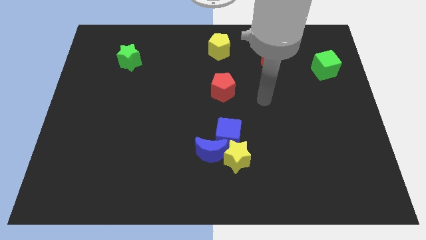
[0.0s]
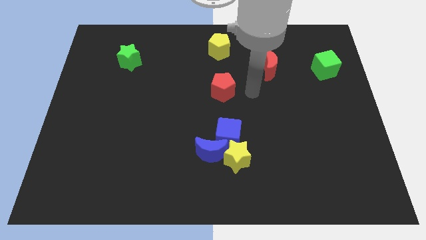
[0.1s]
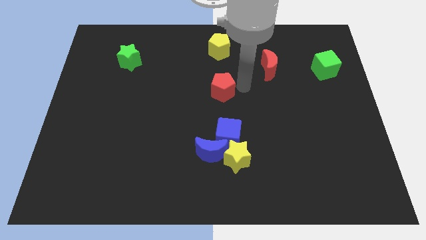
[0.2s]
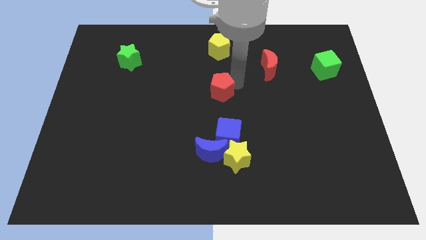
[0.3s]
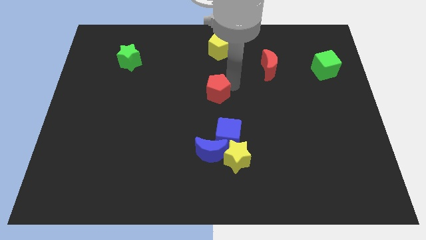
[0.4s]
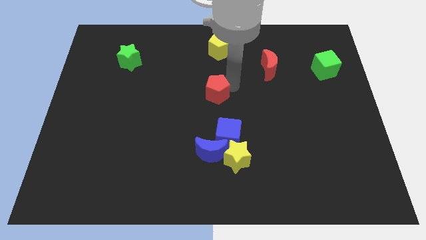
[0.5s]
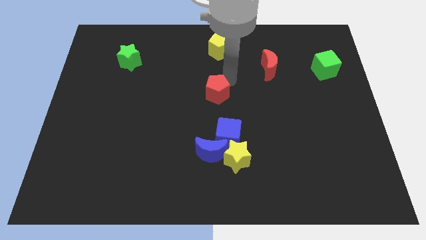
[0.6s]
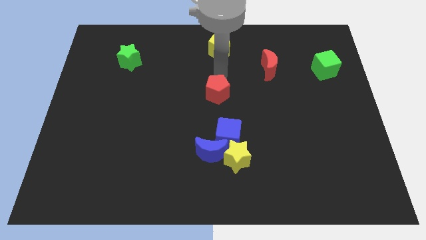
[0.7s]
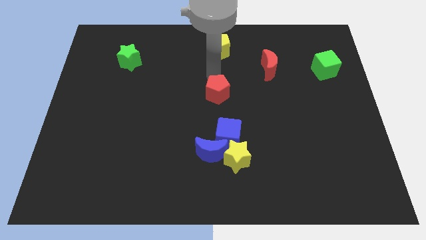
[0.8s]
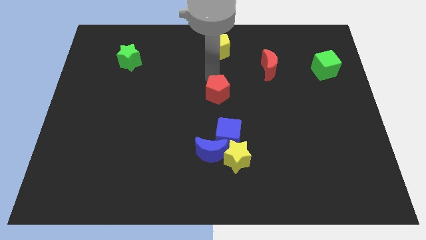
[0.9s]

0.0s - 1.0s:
push the red pentagon slightly to the left

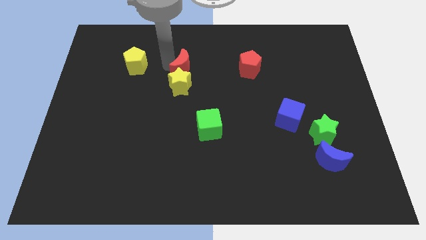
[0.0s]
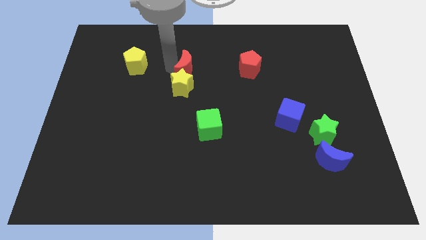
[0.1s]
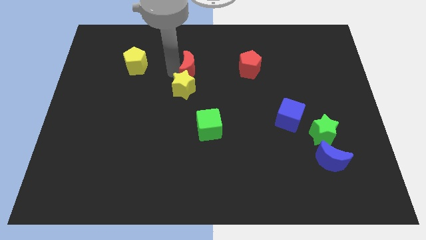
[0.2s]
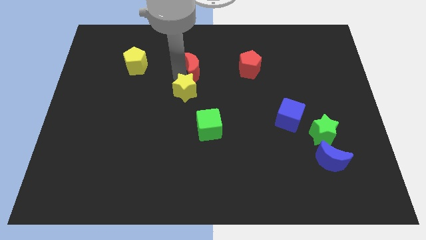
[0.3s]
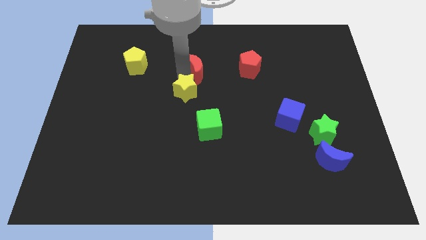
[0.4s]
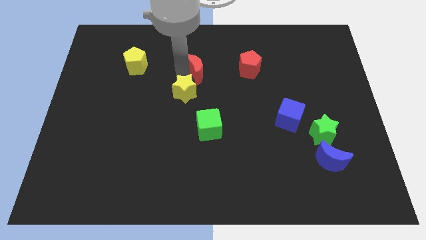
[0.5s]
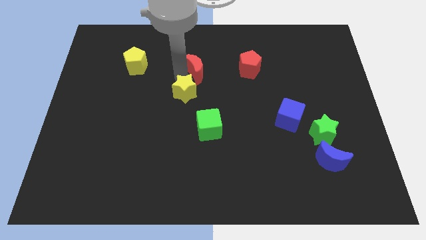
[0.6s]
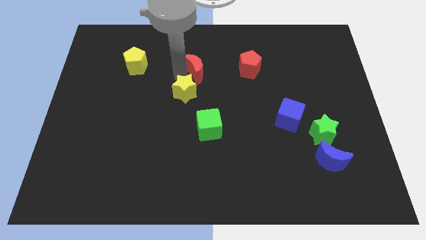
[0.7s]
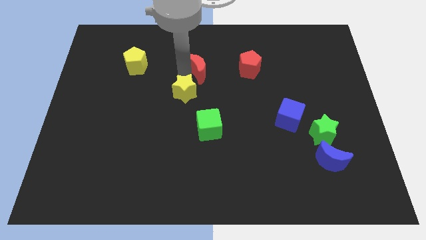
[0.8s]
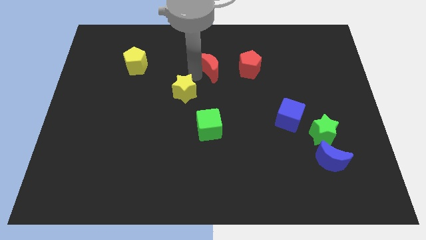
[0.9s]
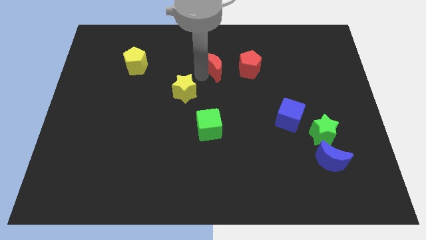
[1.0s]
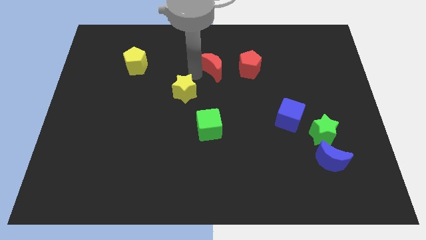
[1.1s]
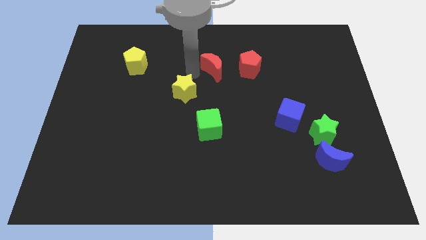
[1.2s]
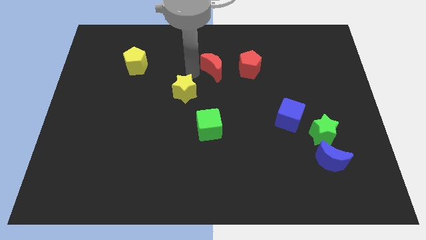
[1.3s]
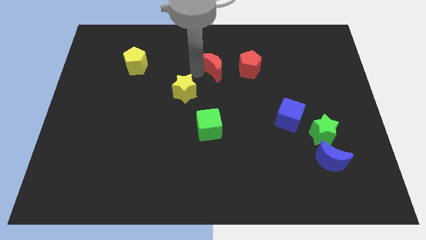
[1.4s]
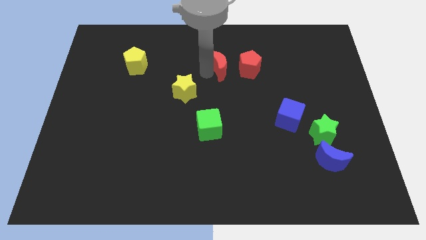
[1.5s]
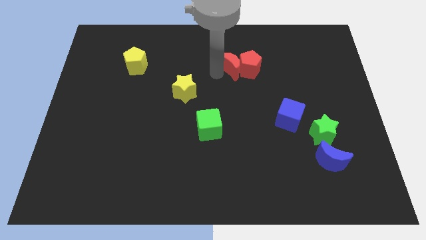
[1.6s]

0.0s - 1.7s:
push red and yellow blocks apart

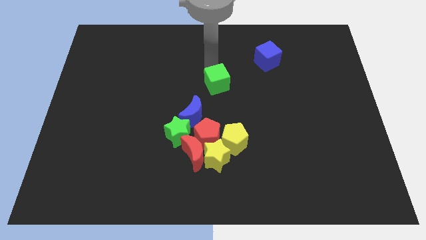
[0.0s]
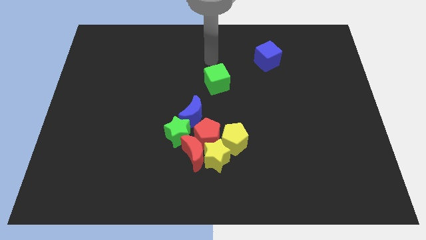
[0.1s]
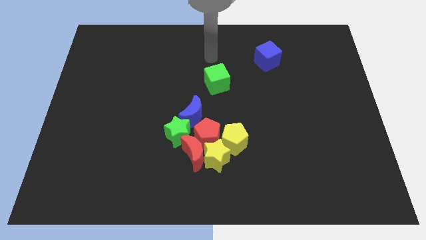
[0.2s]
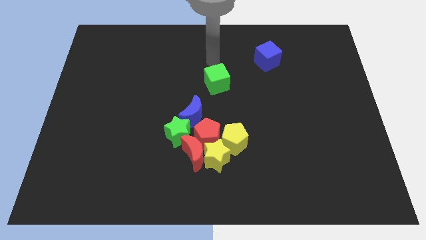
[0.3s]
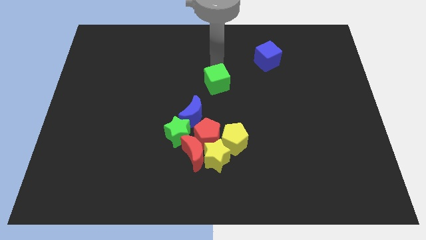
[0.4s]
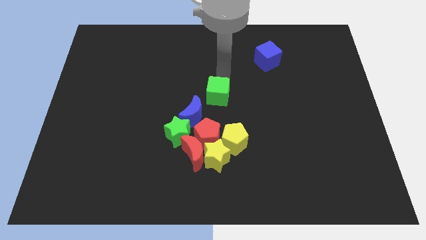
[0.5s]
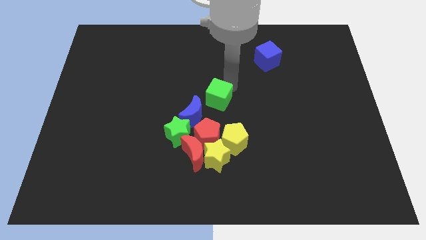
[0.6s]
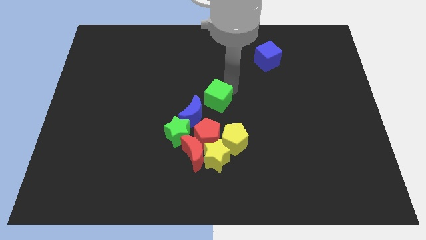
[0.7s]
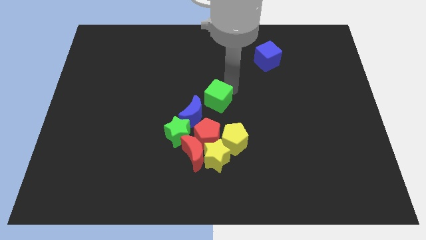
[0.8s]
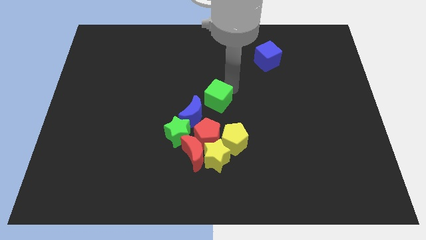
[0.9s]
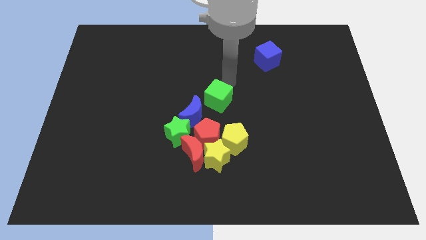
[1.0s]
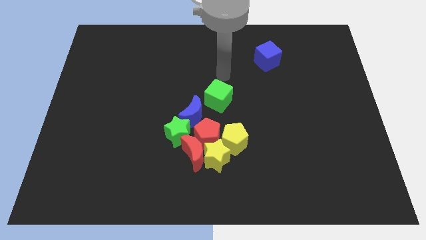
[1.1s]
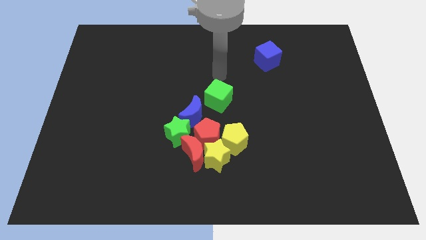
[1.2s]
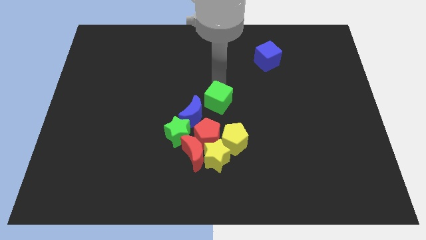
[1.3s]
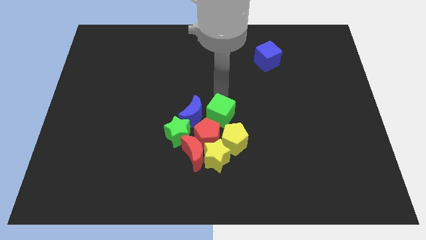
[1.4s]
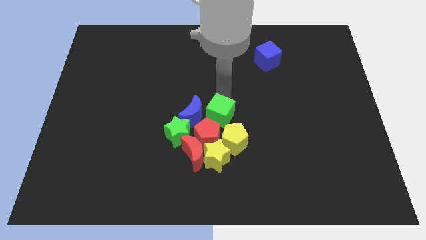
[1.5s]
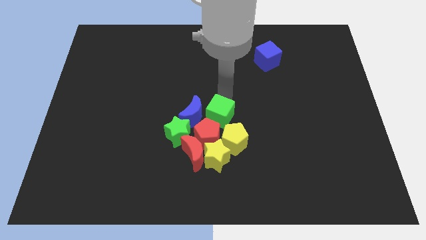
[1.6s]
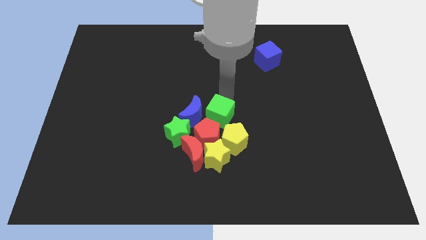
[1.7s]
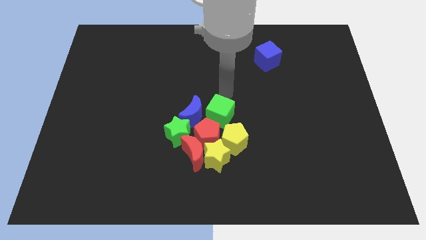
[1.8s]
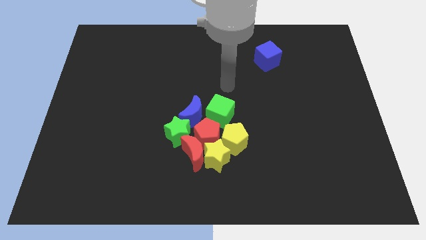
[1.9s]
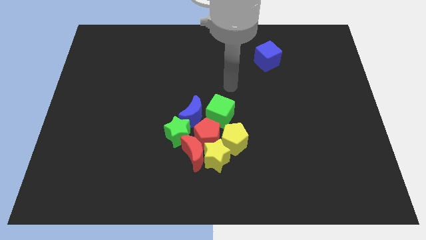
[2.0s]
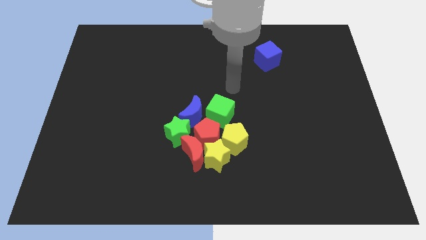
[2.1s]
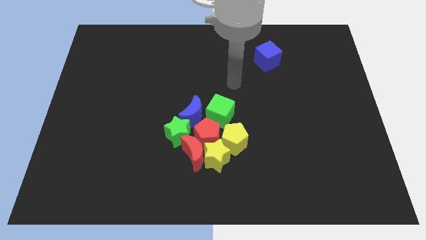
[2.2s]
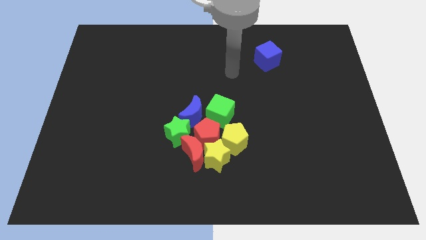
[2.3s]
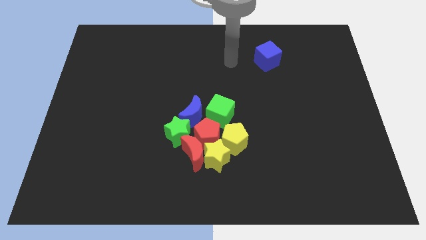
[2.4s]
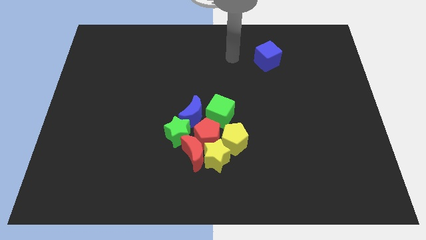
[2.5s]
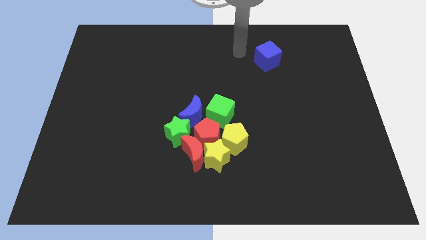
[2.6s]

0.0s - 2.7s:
slide the green cube diagonal top right to red pentagon

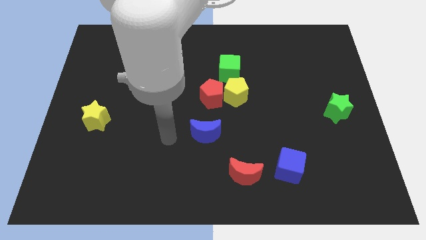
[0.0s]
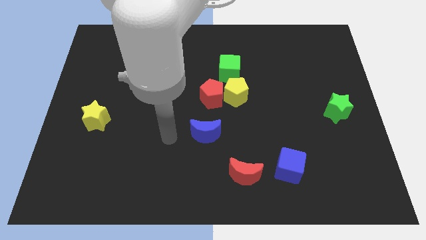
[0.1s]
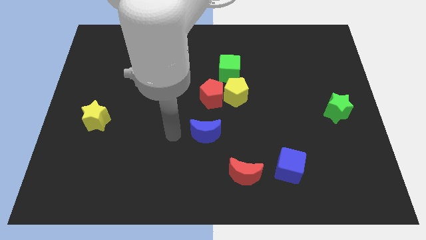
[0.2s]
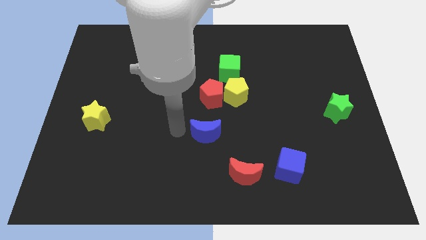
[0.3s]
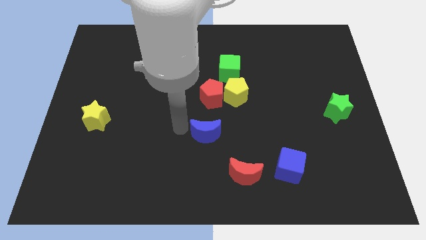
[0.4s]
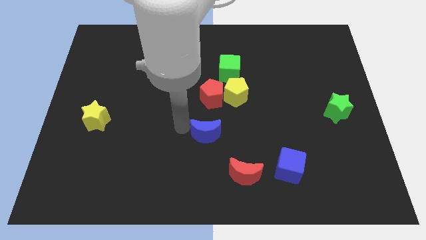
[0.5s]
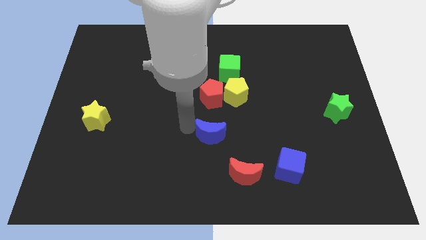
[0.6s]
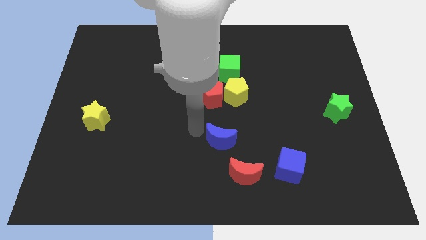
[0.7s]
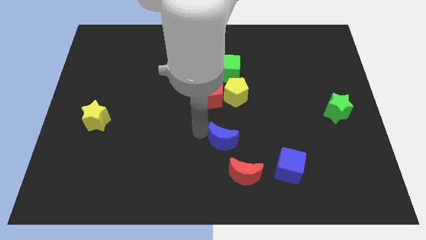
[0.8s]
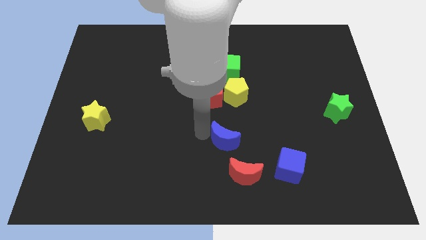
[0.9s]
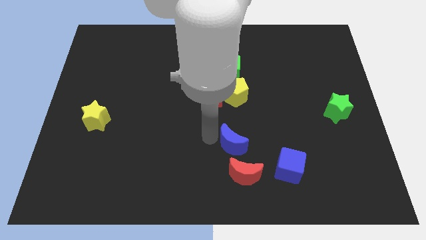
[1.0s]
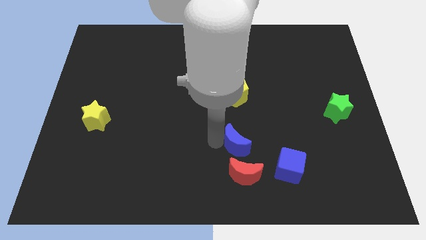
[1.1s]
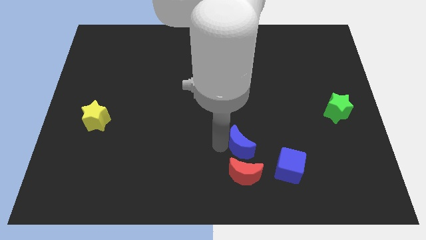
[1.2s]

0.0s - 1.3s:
push the blue crescent to the top of the red crescent

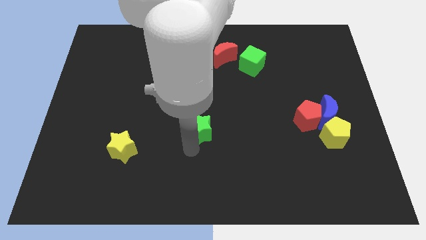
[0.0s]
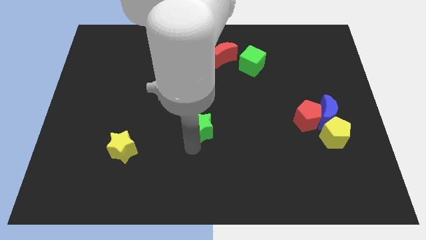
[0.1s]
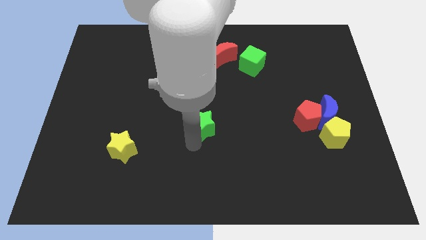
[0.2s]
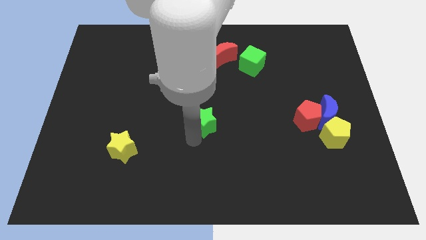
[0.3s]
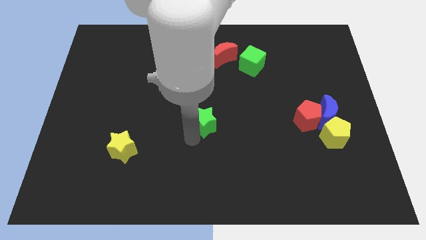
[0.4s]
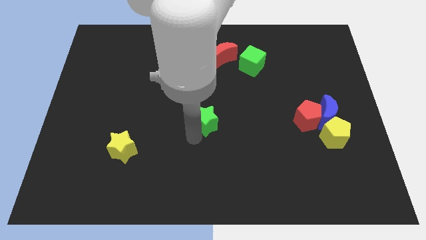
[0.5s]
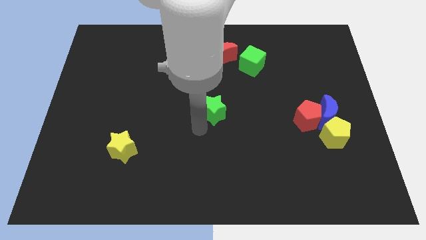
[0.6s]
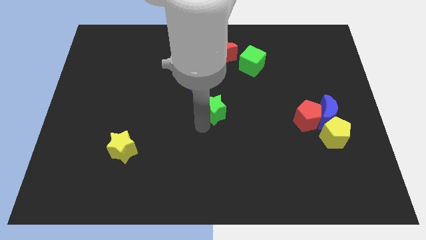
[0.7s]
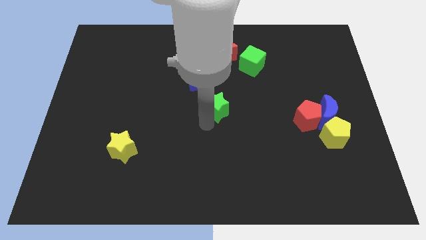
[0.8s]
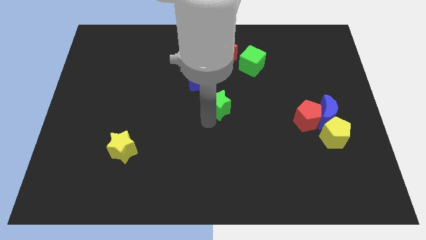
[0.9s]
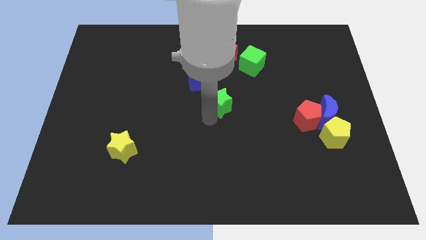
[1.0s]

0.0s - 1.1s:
push the green star towards the center of the board

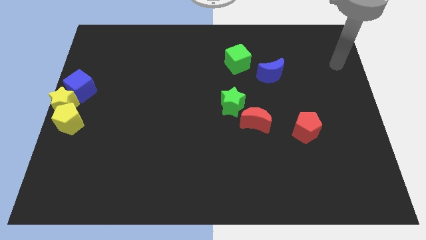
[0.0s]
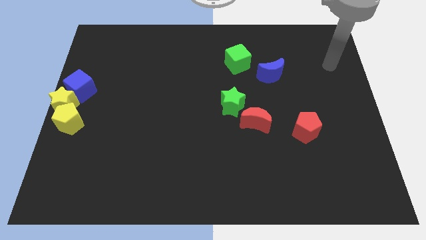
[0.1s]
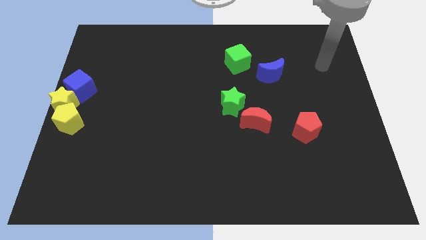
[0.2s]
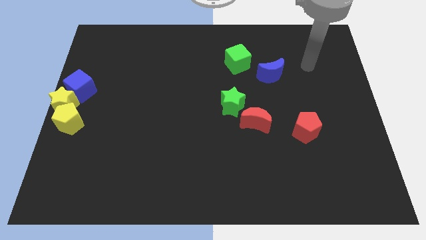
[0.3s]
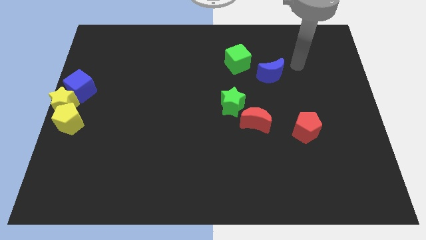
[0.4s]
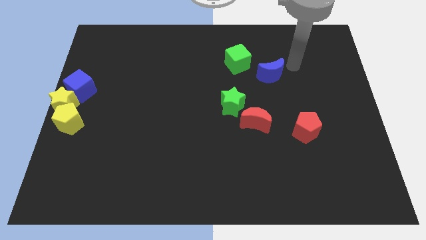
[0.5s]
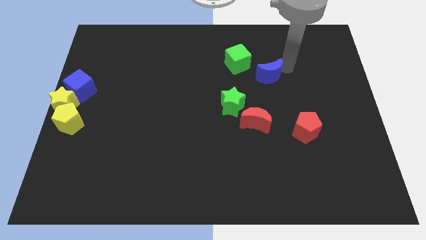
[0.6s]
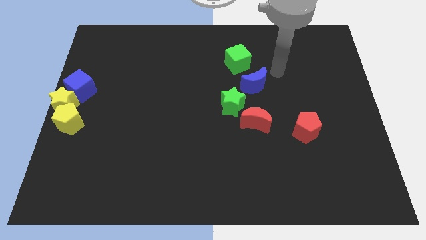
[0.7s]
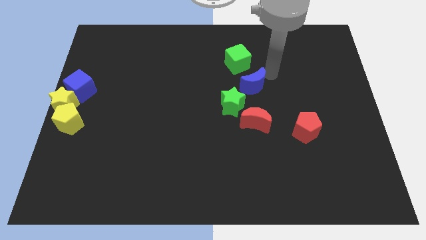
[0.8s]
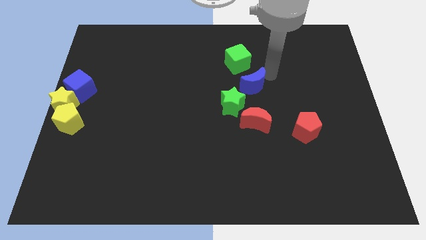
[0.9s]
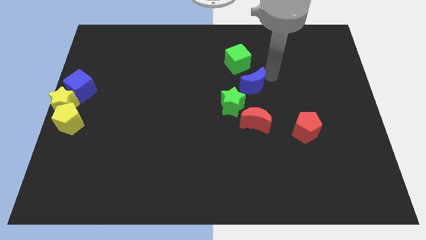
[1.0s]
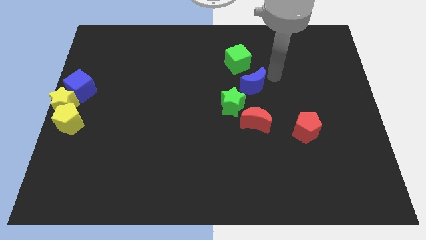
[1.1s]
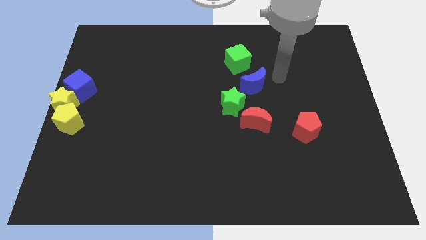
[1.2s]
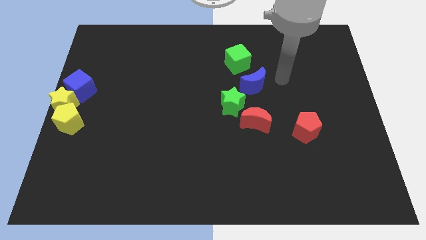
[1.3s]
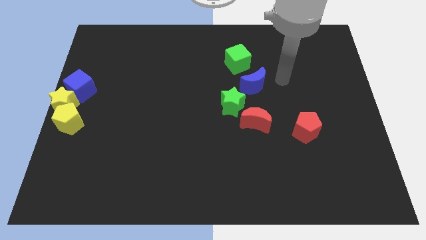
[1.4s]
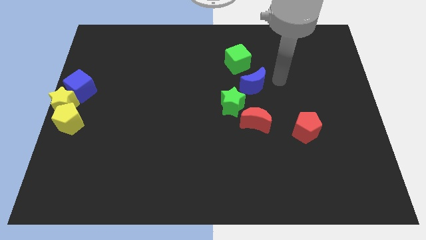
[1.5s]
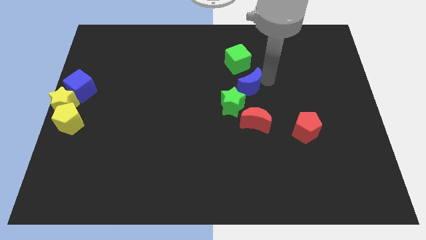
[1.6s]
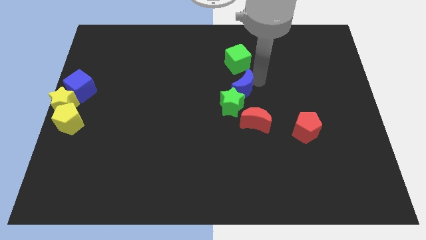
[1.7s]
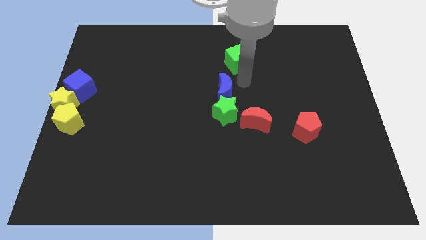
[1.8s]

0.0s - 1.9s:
put the blue moon vertically above the green star
